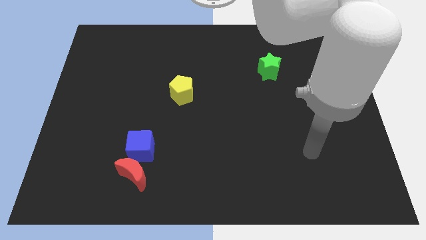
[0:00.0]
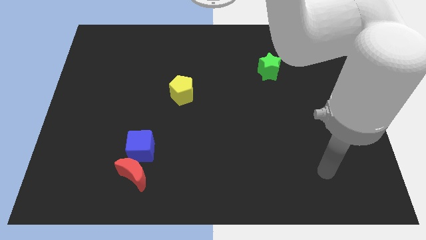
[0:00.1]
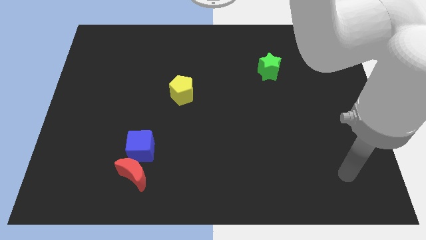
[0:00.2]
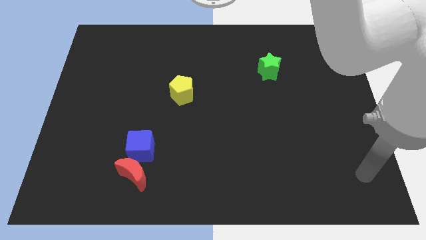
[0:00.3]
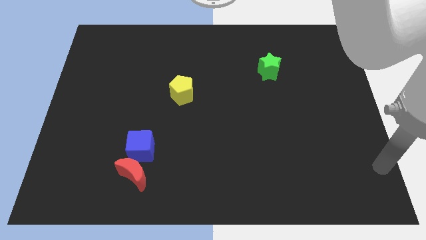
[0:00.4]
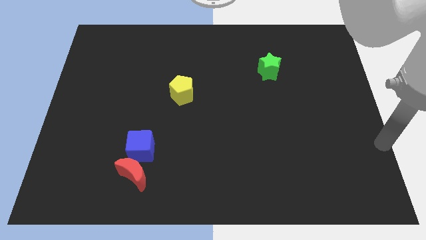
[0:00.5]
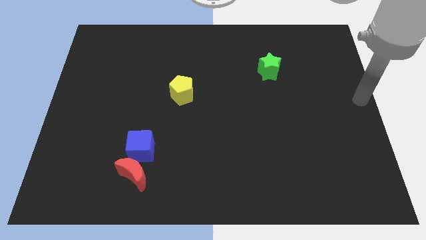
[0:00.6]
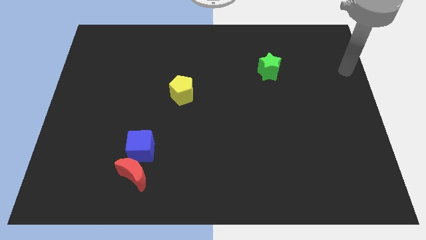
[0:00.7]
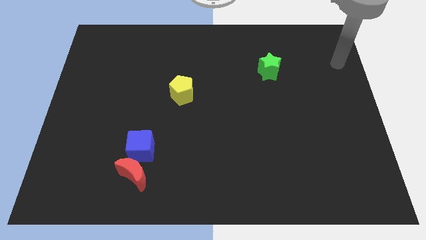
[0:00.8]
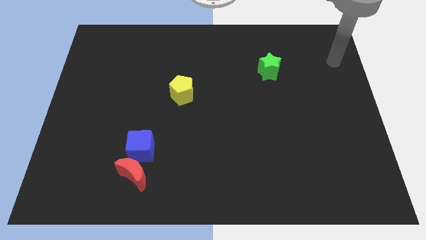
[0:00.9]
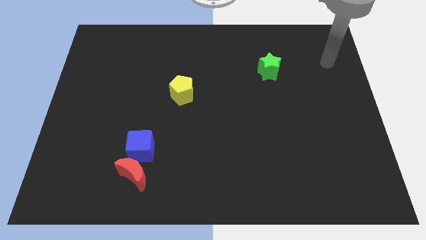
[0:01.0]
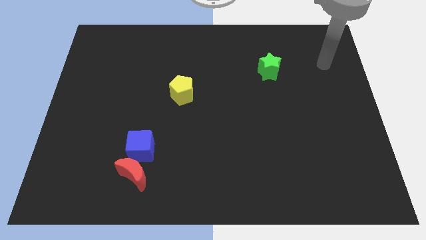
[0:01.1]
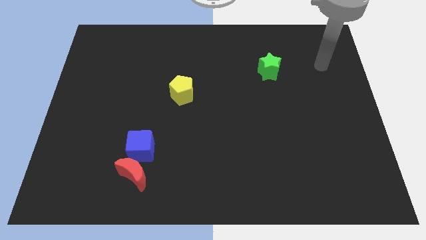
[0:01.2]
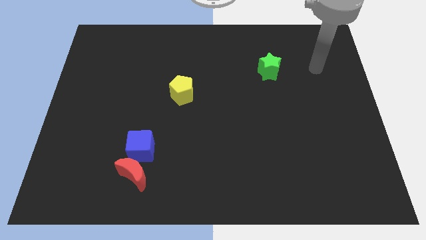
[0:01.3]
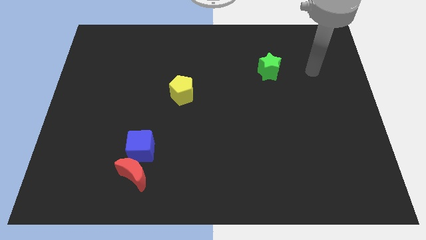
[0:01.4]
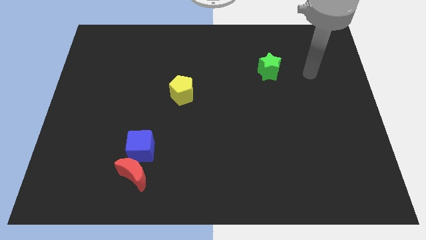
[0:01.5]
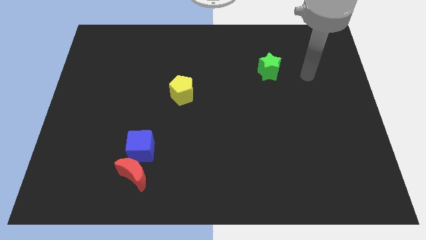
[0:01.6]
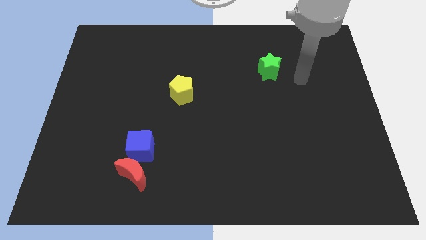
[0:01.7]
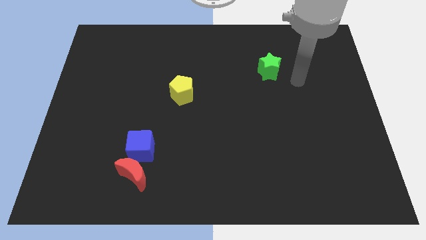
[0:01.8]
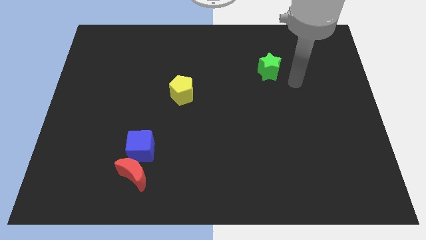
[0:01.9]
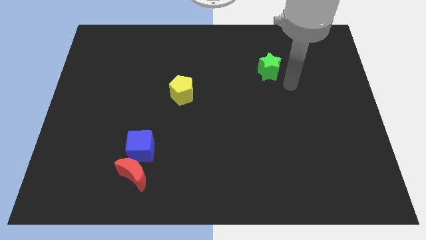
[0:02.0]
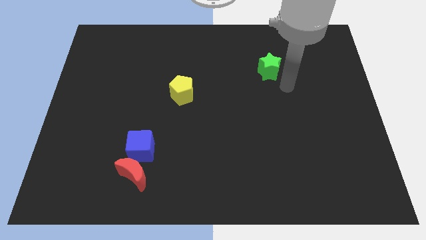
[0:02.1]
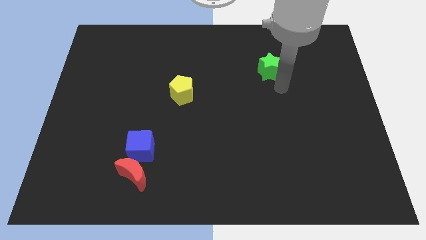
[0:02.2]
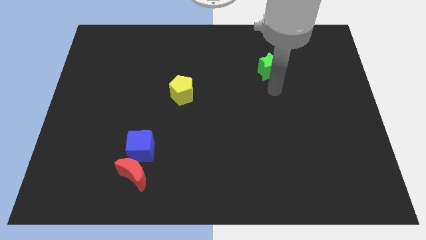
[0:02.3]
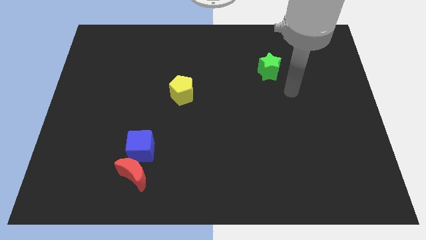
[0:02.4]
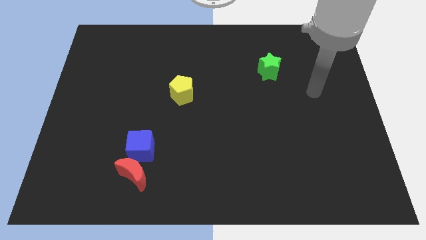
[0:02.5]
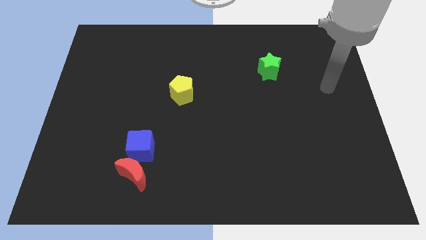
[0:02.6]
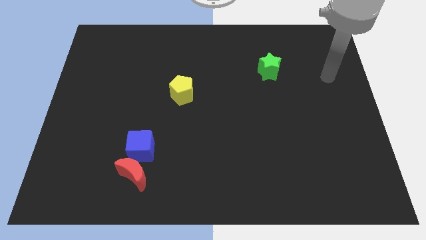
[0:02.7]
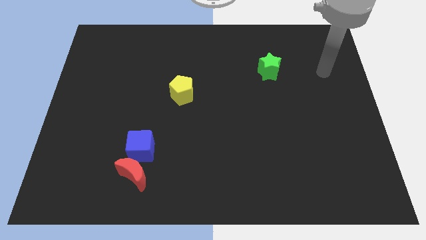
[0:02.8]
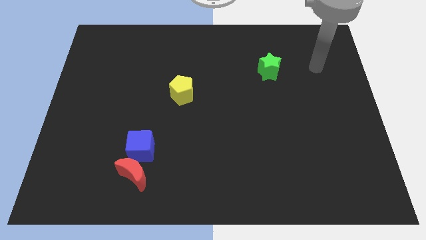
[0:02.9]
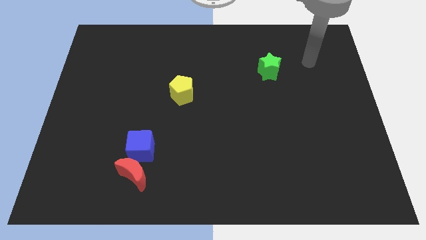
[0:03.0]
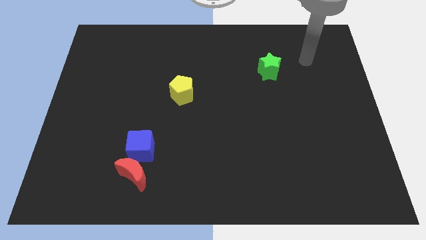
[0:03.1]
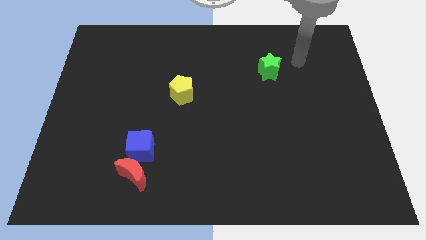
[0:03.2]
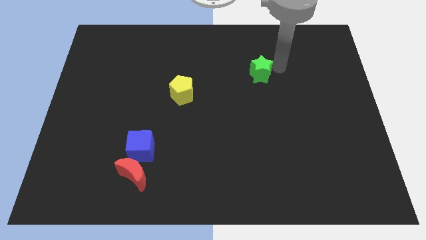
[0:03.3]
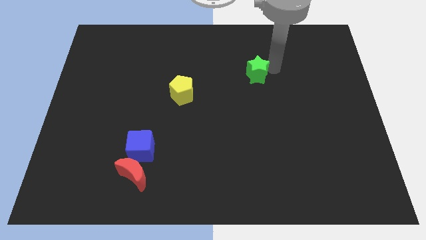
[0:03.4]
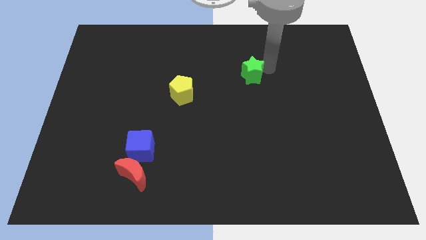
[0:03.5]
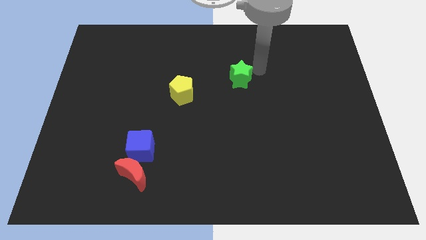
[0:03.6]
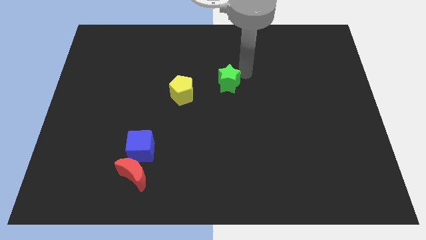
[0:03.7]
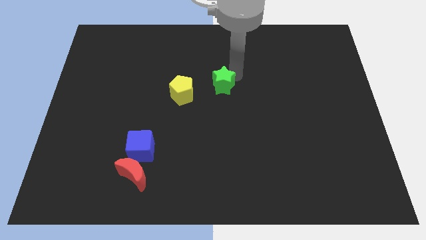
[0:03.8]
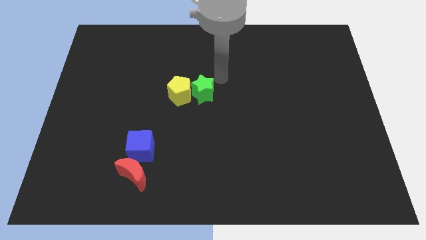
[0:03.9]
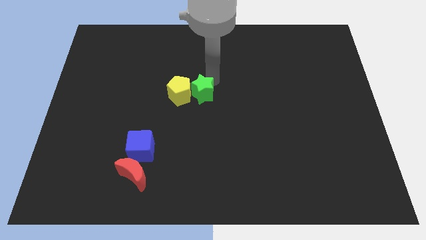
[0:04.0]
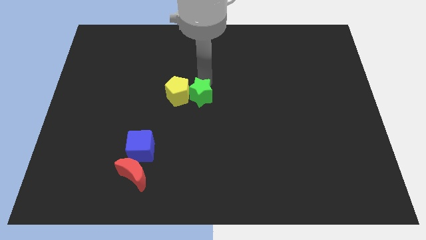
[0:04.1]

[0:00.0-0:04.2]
move the green block next to the pentagon

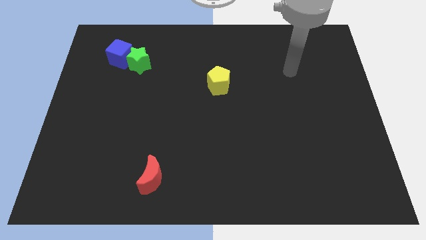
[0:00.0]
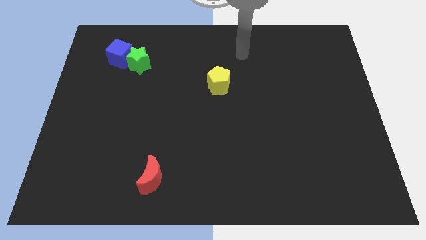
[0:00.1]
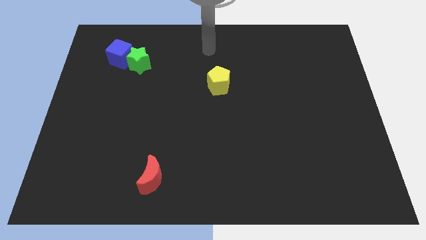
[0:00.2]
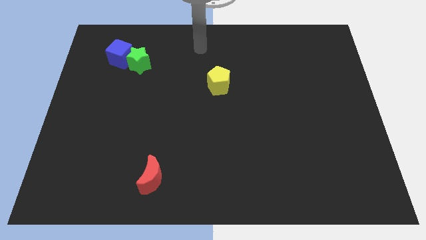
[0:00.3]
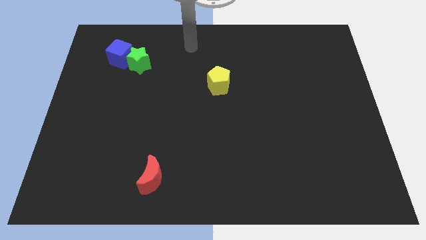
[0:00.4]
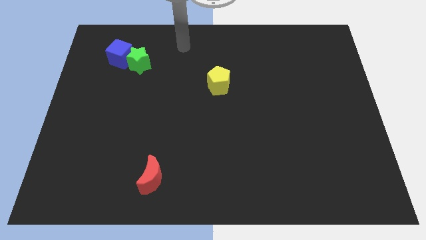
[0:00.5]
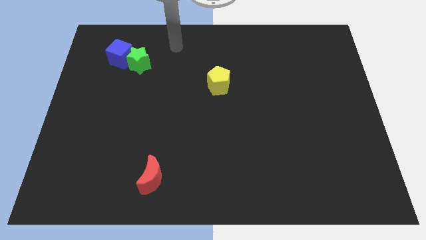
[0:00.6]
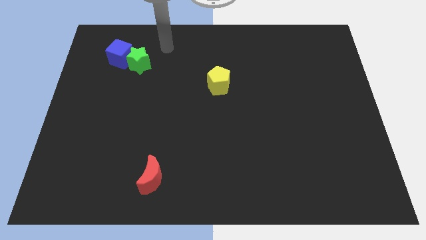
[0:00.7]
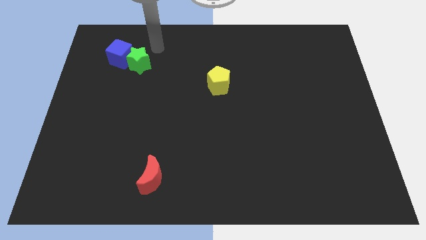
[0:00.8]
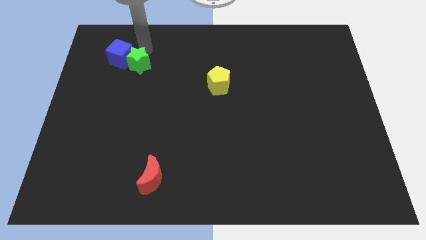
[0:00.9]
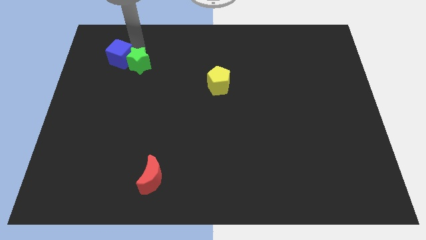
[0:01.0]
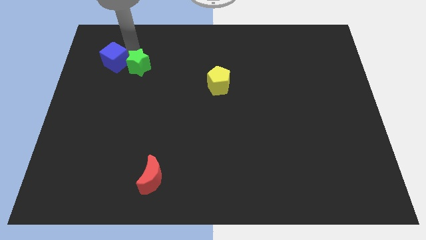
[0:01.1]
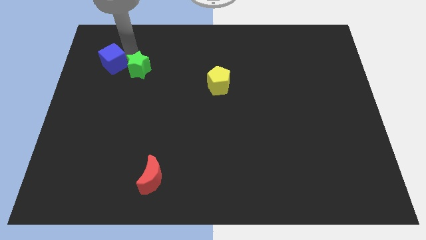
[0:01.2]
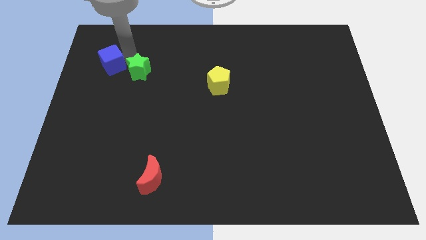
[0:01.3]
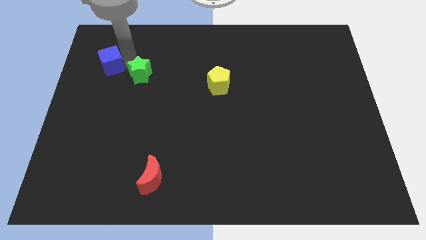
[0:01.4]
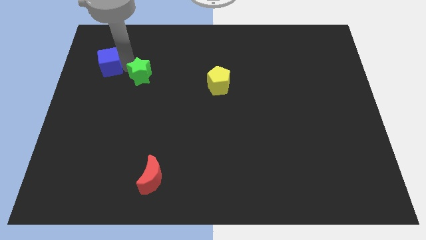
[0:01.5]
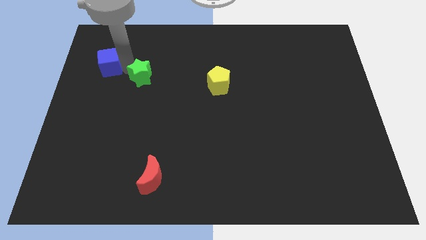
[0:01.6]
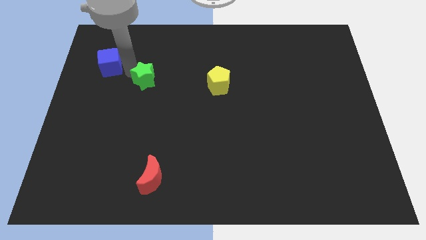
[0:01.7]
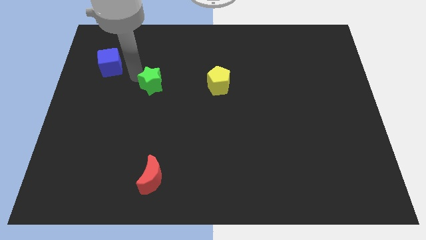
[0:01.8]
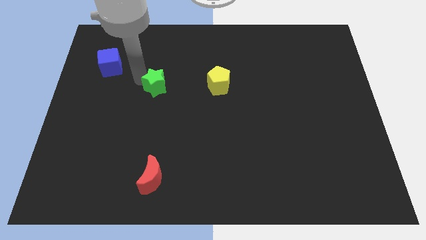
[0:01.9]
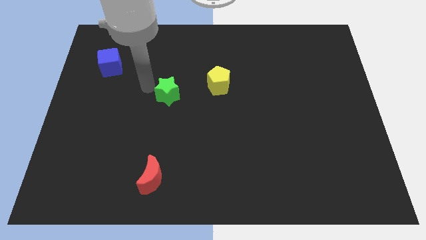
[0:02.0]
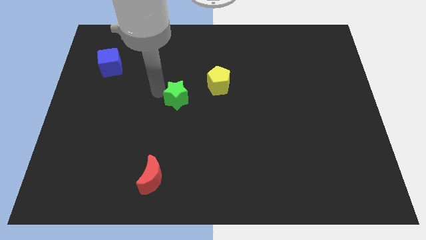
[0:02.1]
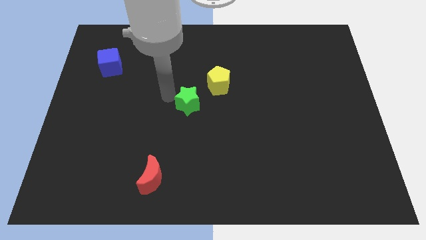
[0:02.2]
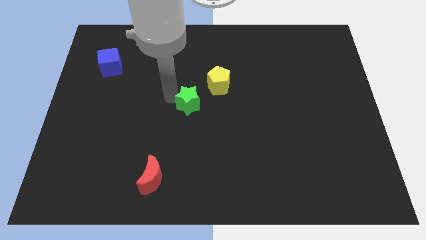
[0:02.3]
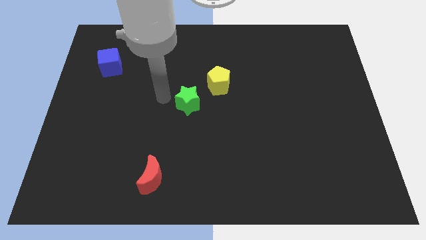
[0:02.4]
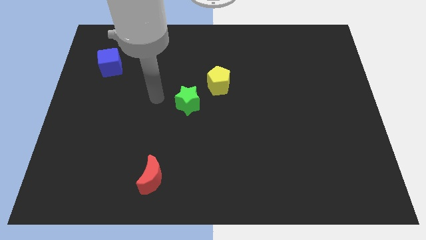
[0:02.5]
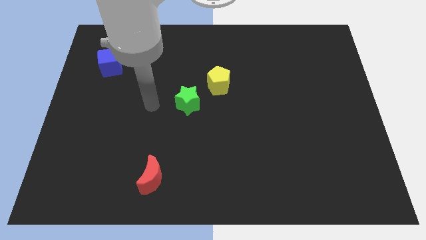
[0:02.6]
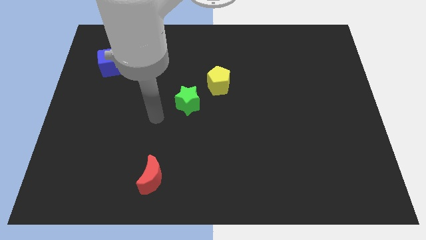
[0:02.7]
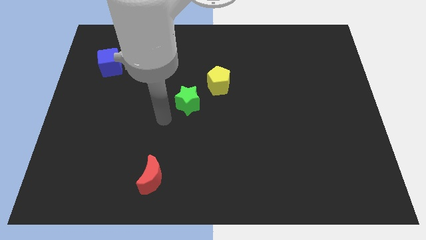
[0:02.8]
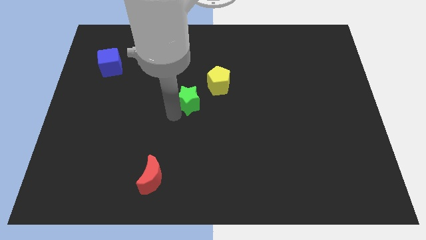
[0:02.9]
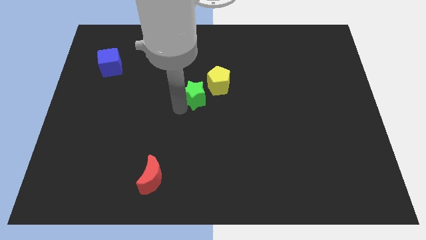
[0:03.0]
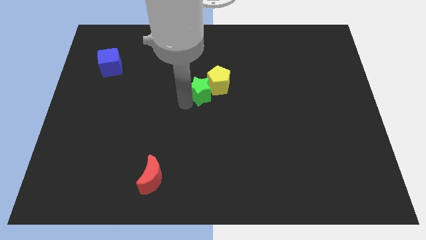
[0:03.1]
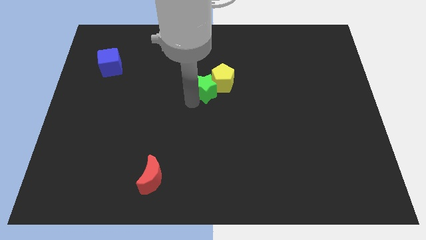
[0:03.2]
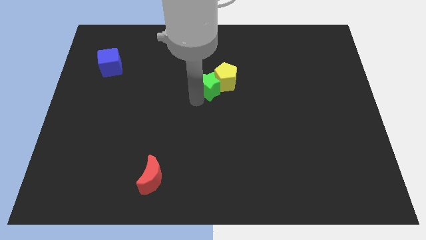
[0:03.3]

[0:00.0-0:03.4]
slide the green block next to the pentagon

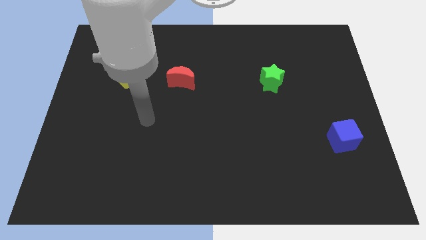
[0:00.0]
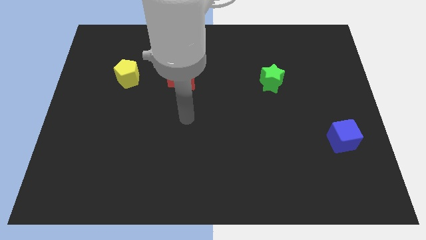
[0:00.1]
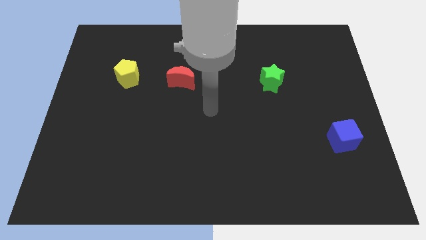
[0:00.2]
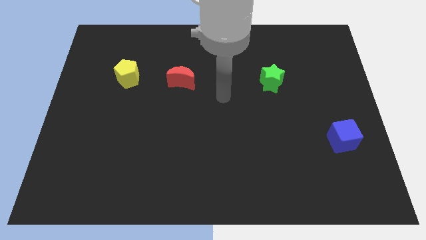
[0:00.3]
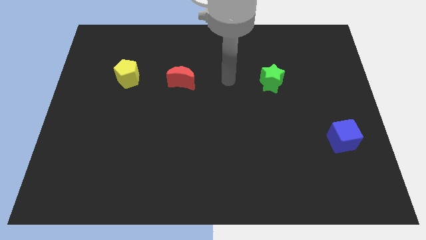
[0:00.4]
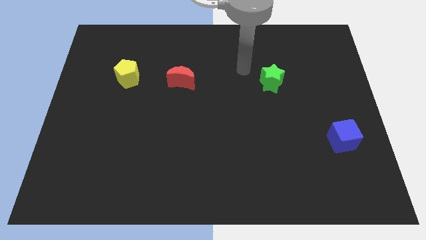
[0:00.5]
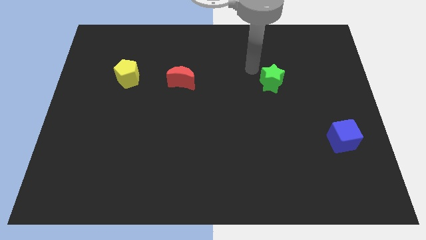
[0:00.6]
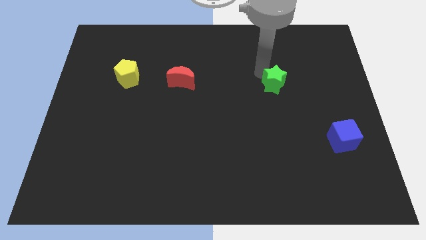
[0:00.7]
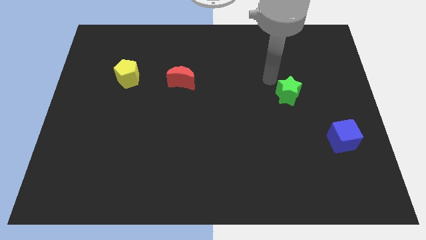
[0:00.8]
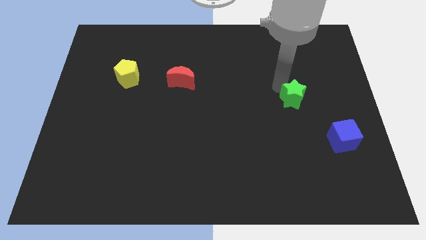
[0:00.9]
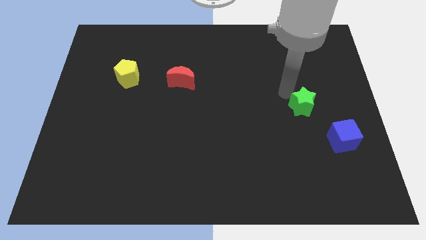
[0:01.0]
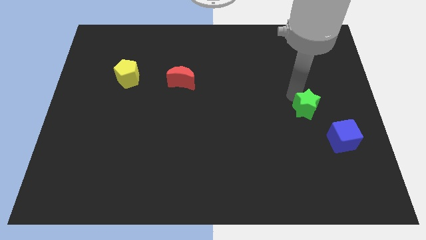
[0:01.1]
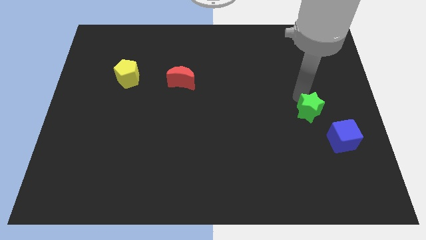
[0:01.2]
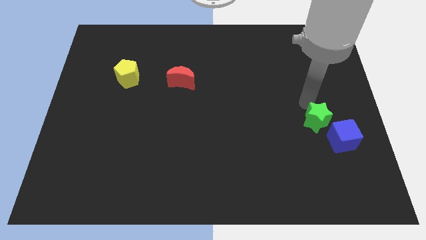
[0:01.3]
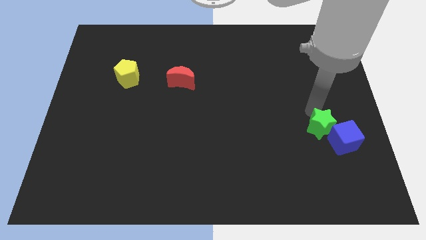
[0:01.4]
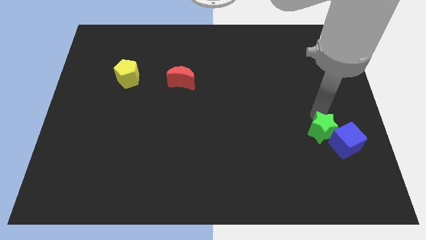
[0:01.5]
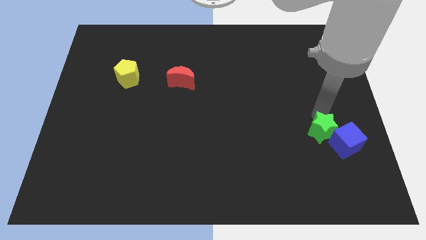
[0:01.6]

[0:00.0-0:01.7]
slide the green star close to the blue cube
